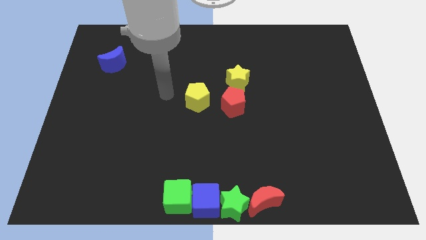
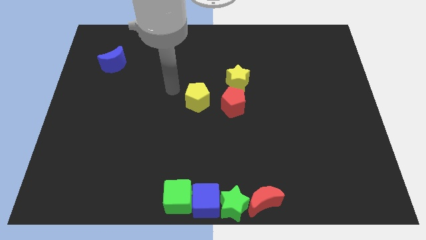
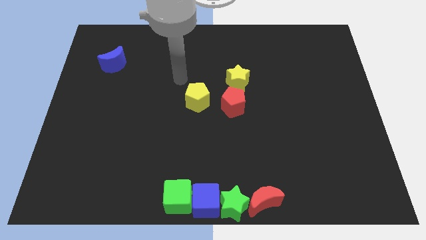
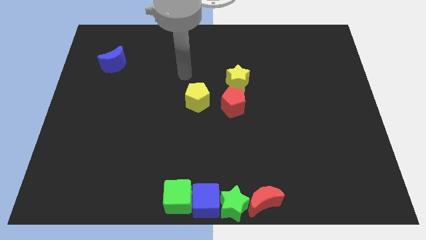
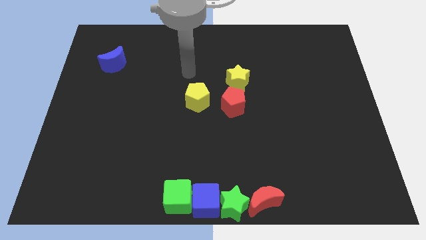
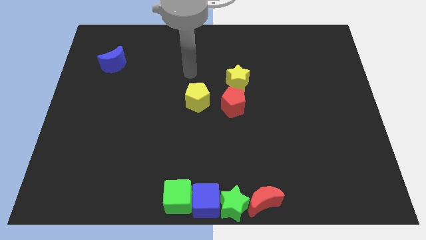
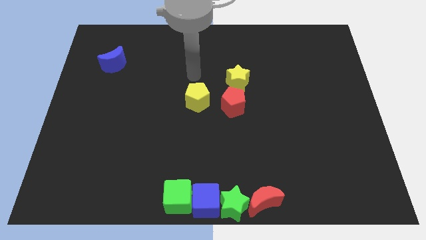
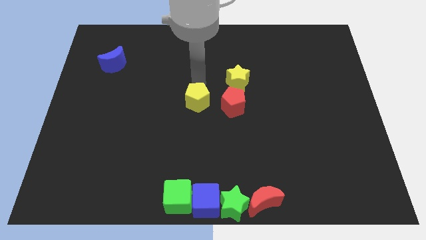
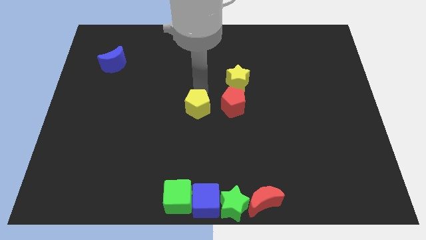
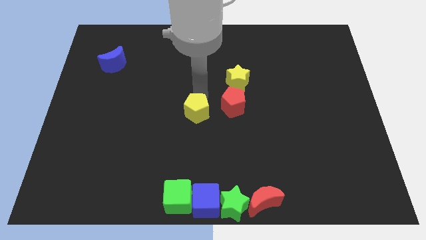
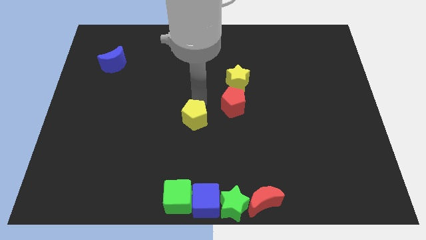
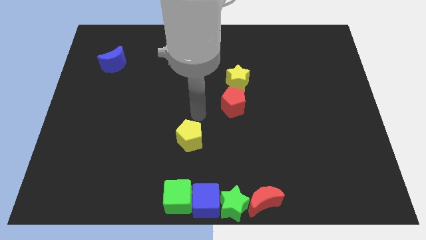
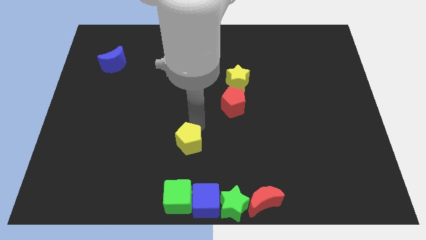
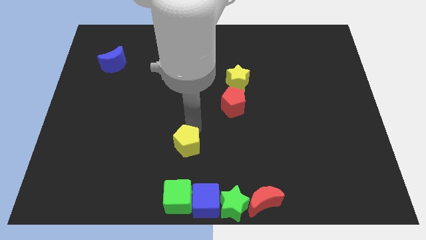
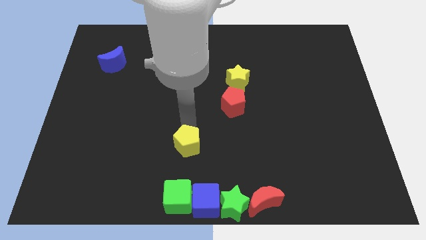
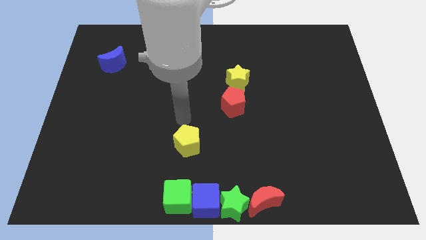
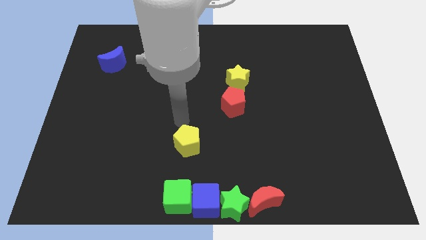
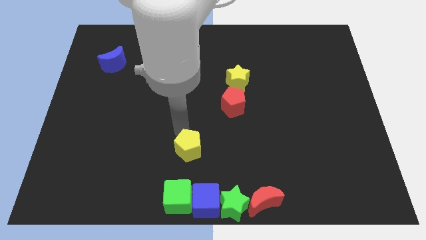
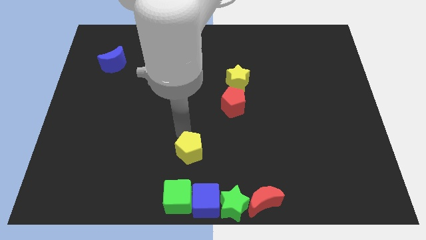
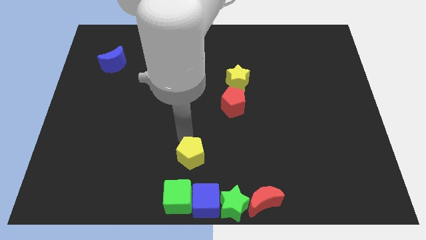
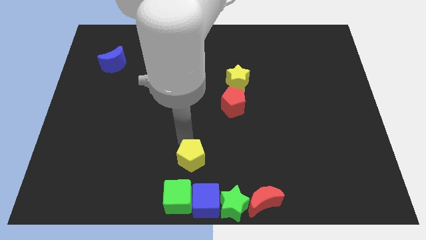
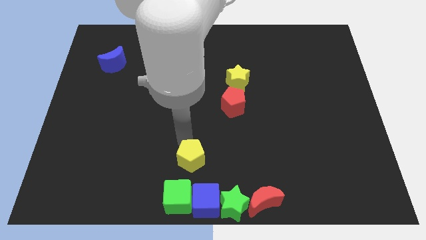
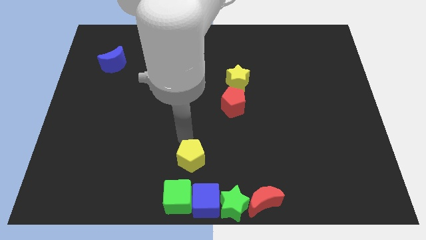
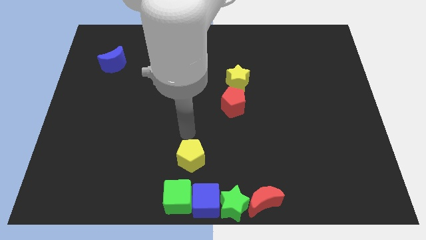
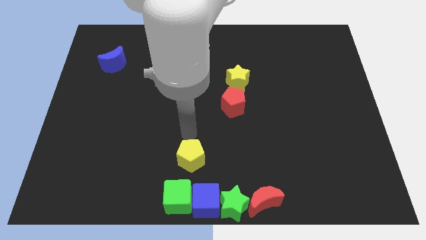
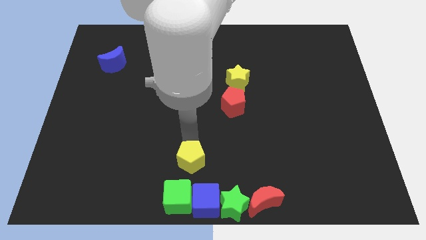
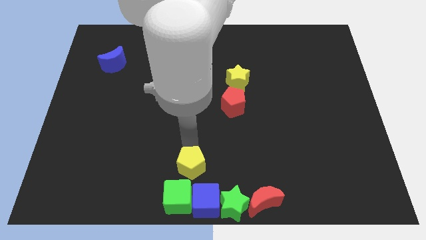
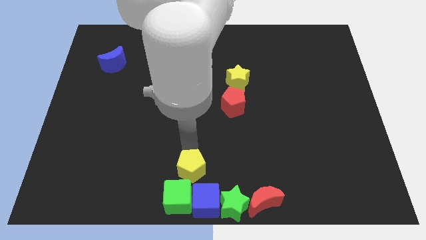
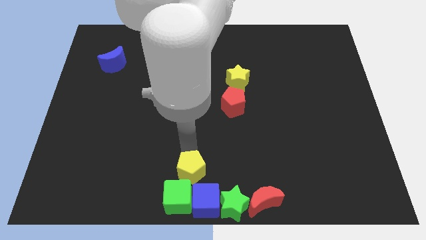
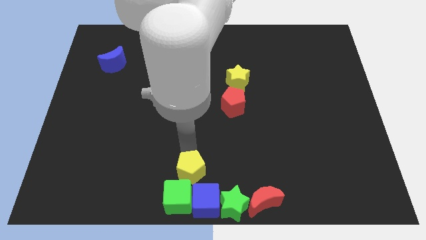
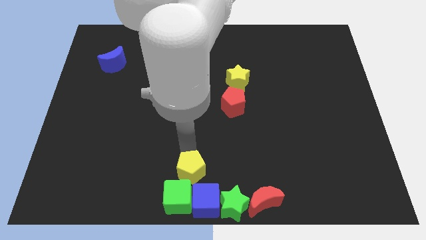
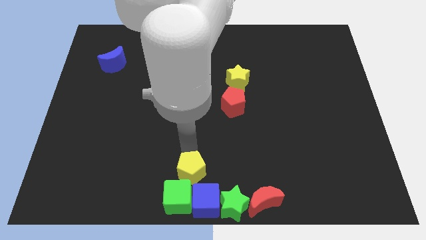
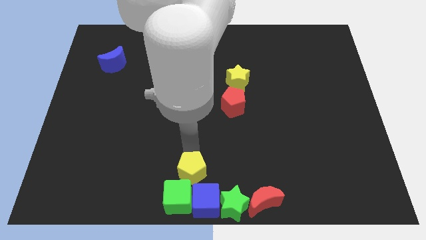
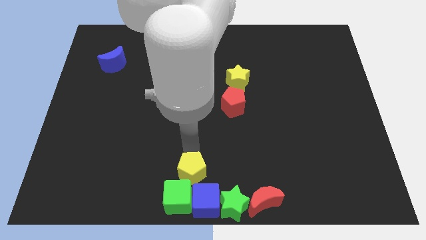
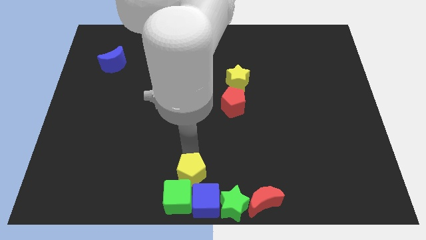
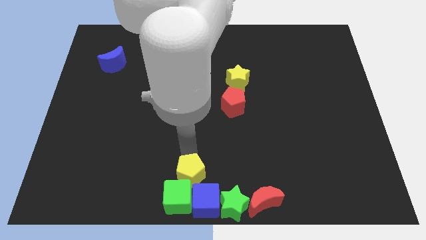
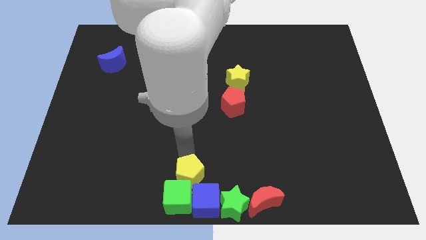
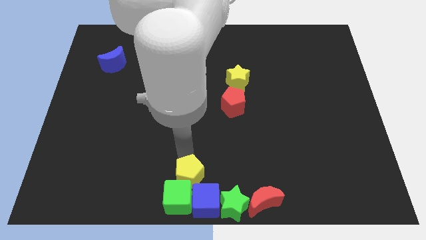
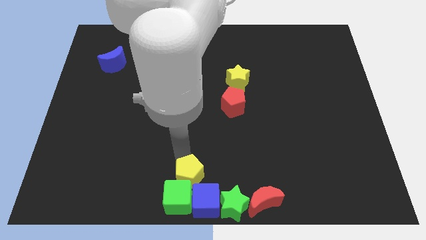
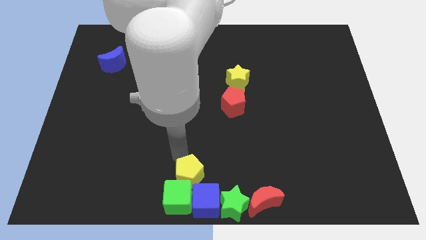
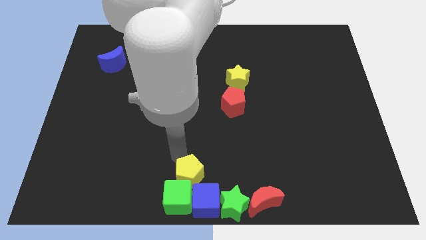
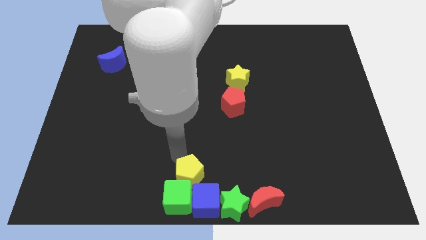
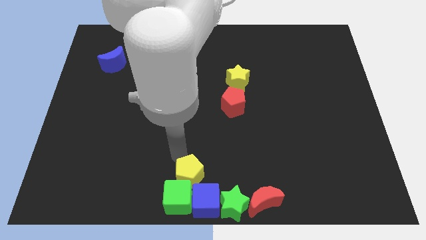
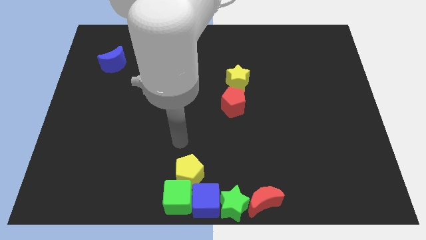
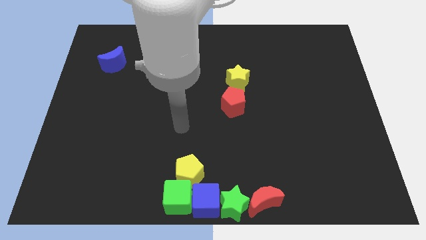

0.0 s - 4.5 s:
place the yellow pentagon to the top of green cube and blue cube

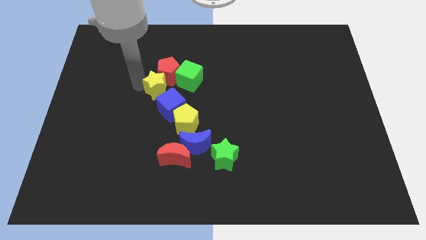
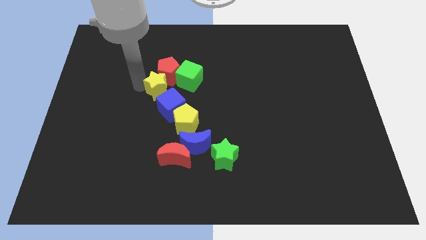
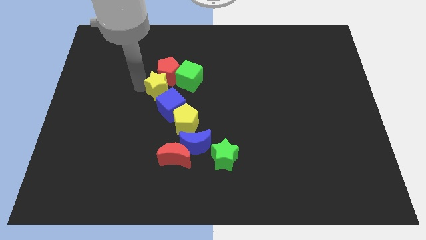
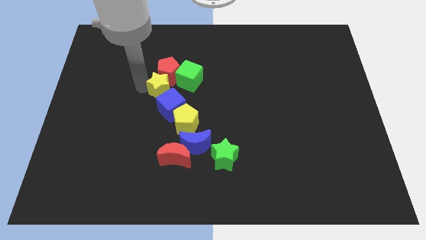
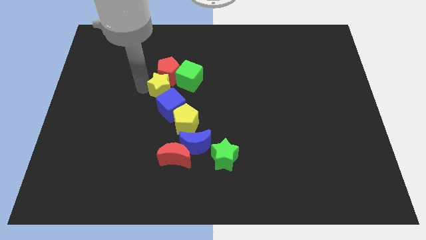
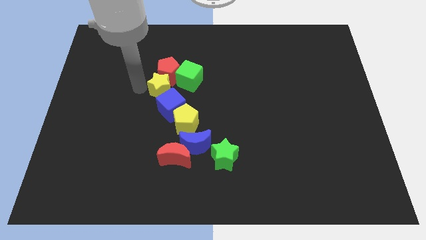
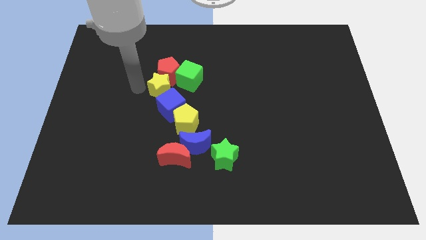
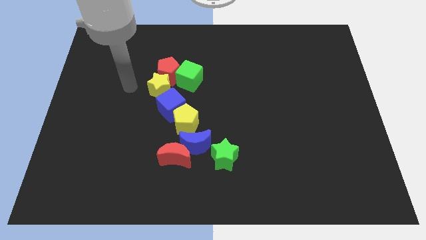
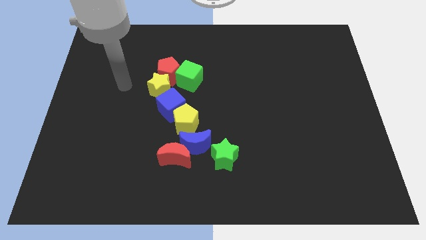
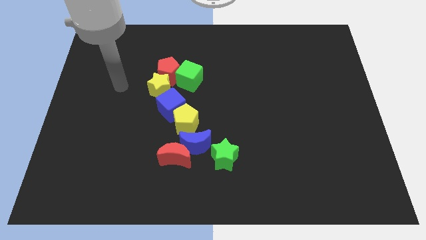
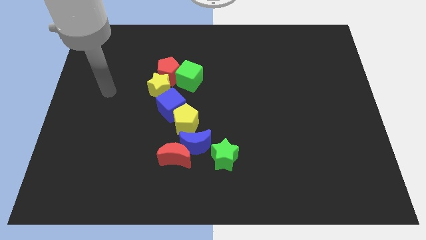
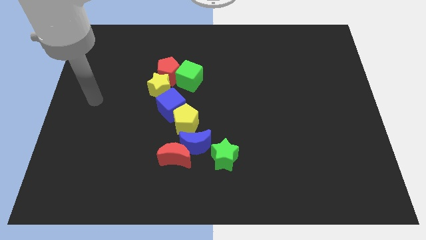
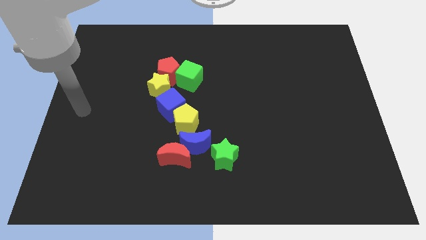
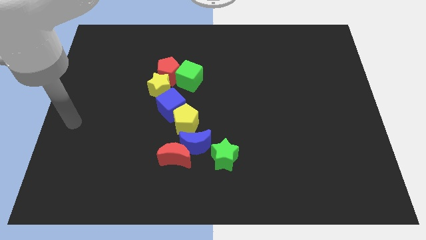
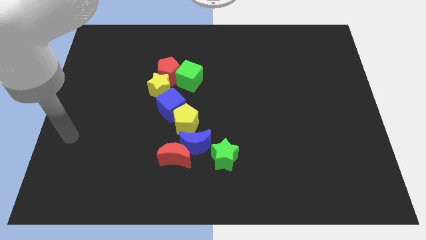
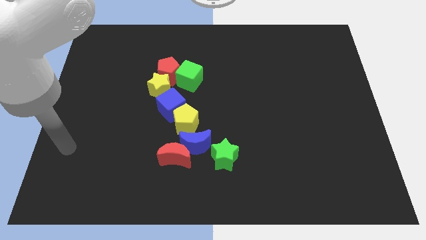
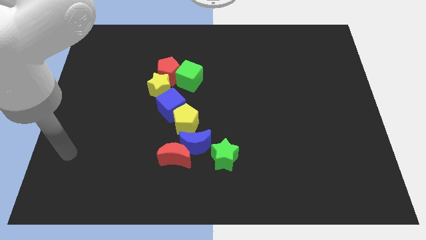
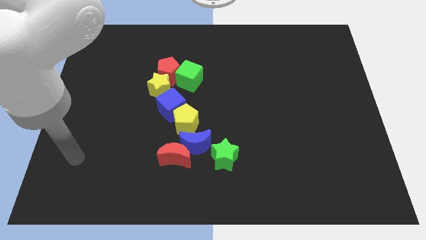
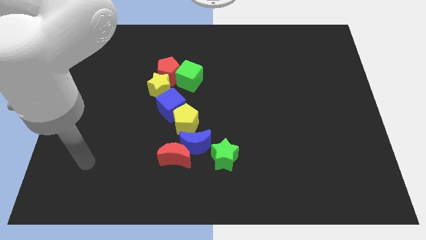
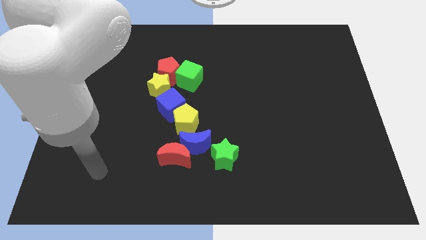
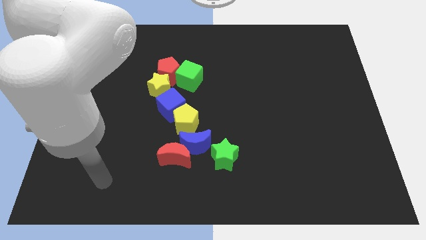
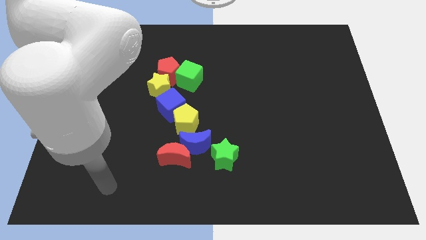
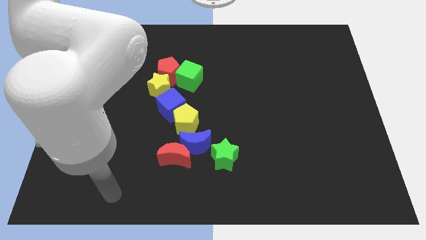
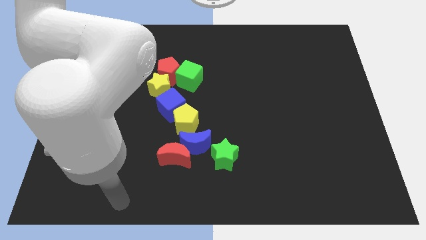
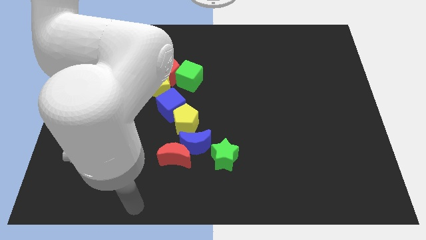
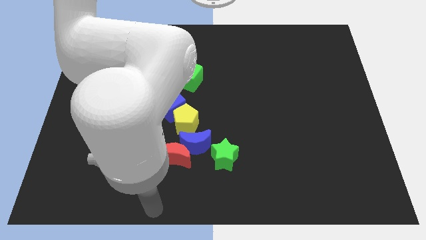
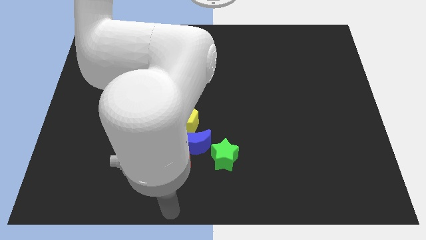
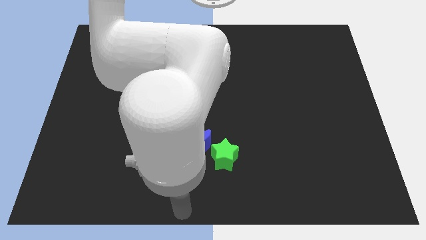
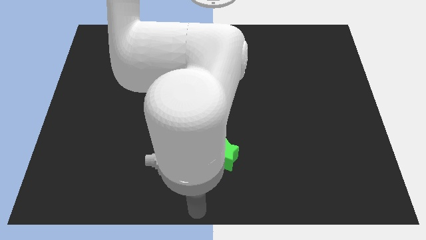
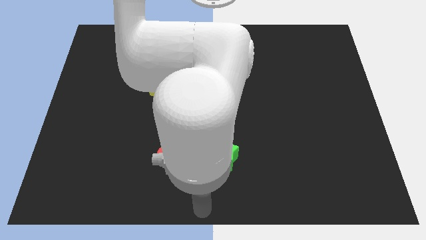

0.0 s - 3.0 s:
point your arm at the bottom center of the board

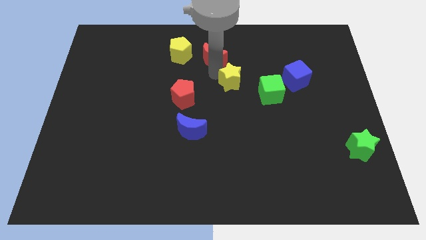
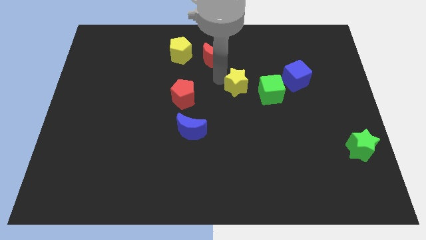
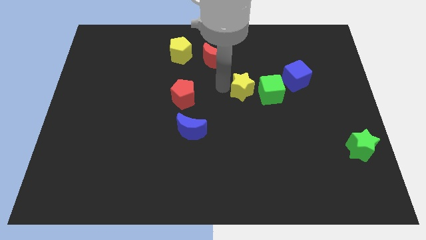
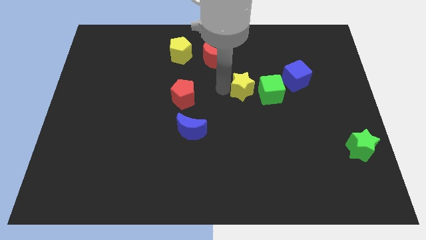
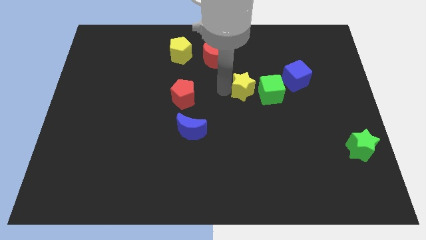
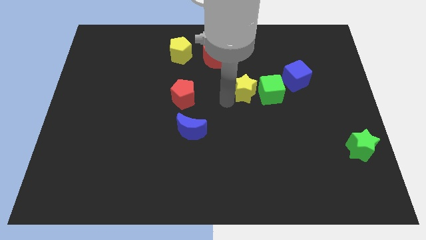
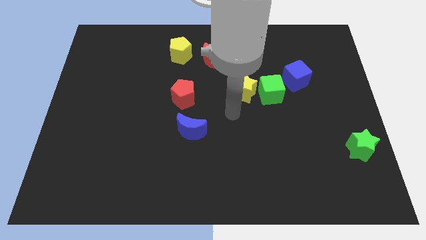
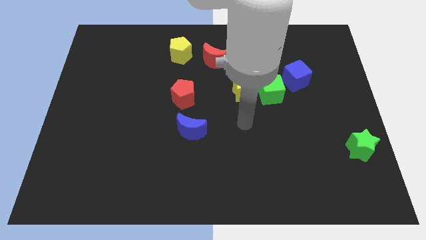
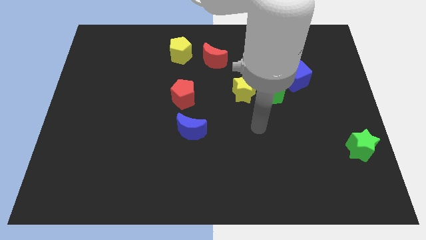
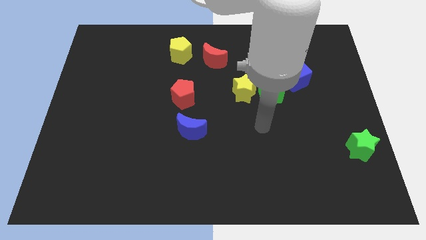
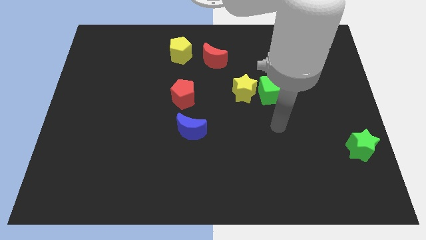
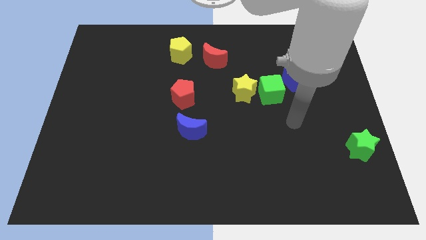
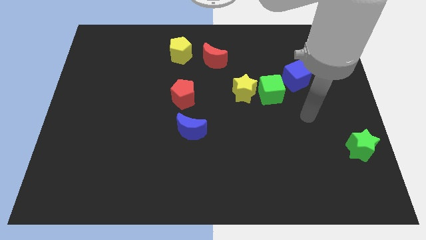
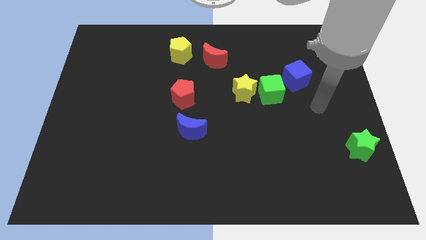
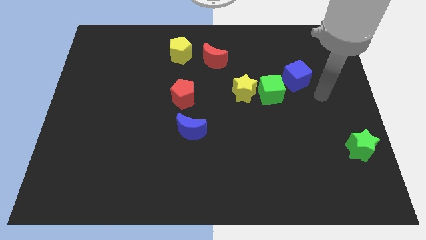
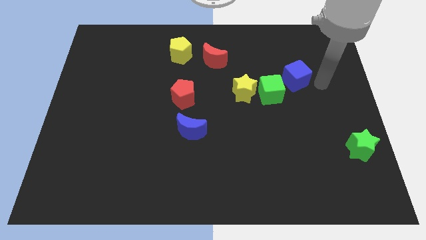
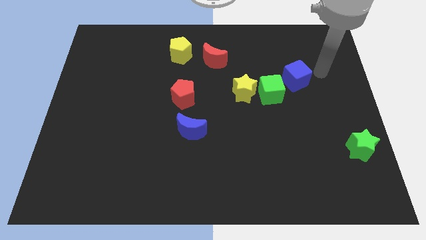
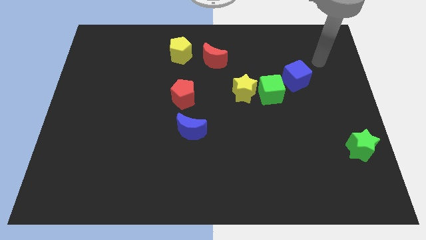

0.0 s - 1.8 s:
put the yellow star left to the green cube
